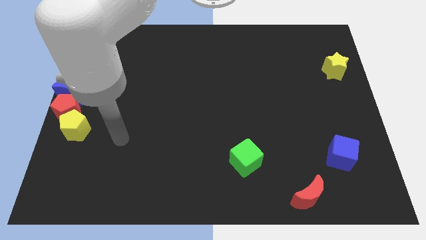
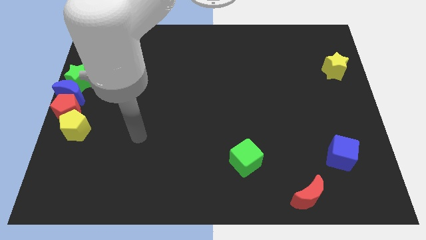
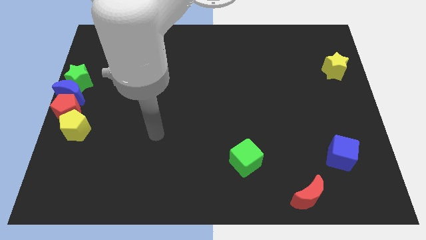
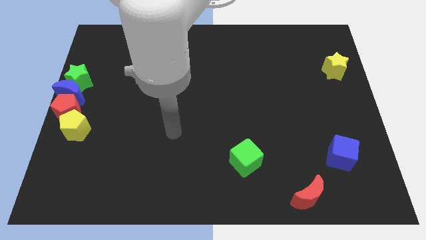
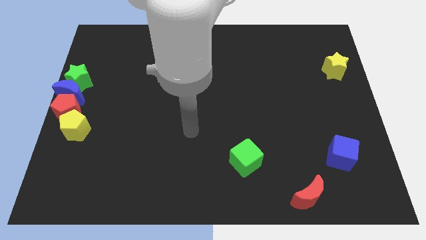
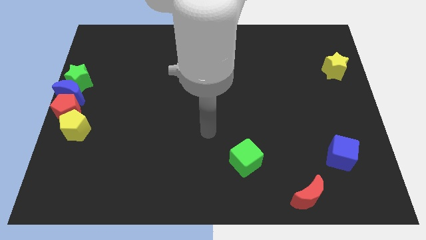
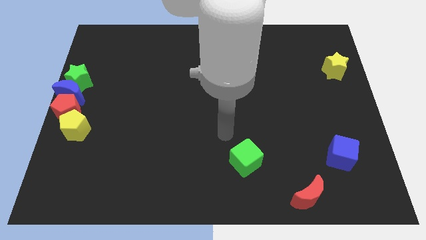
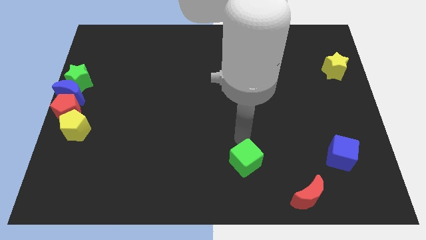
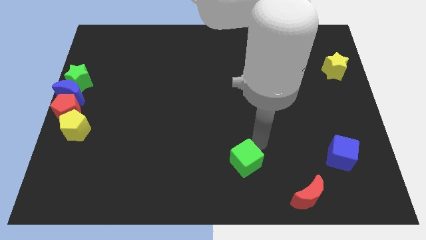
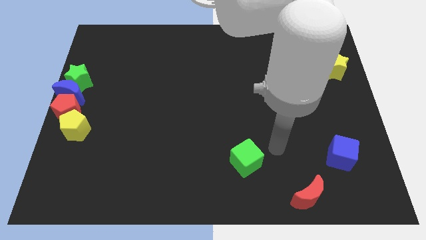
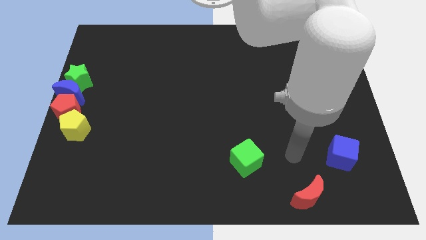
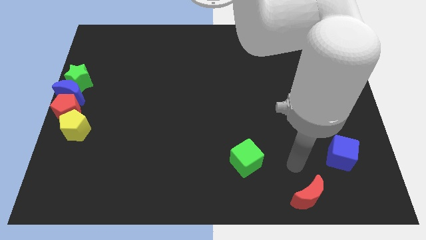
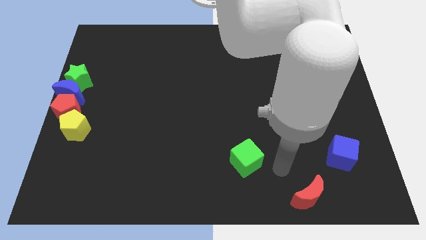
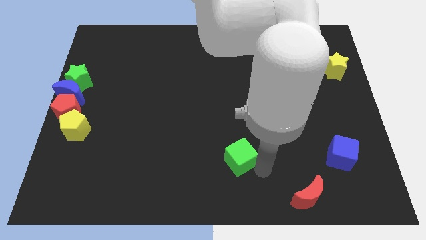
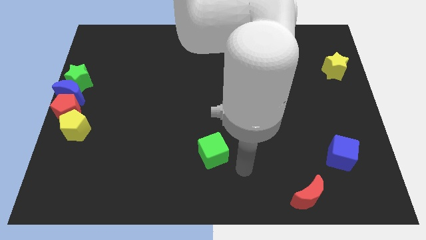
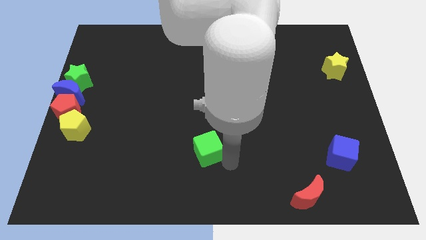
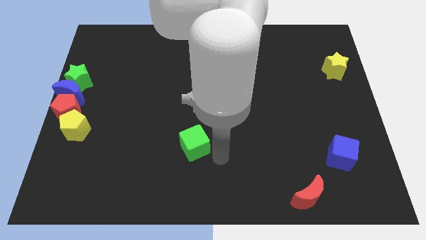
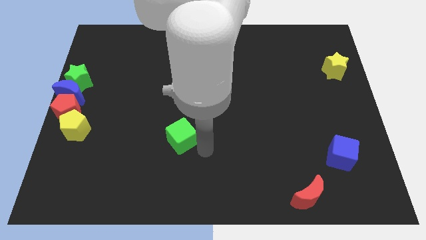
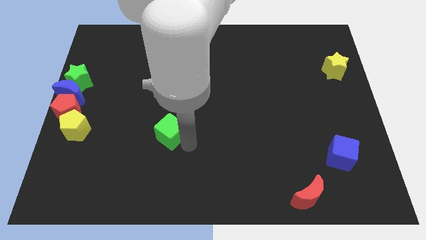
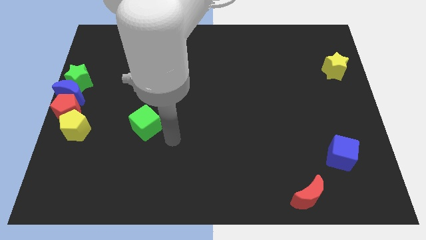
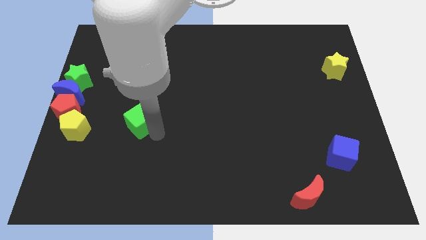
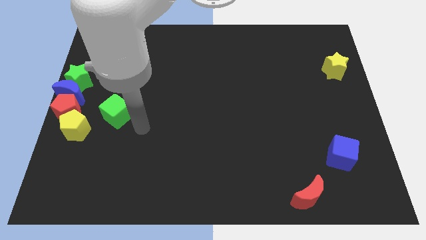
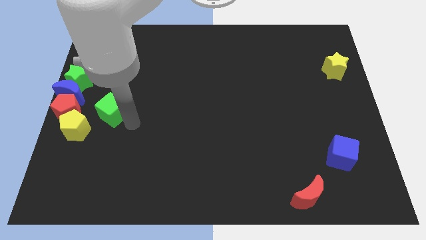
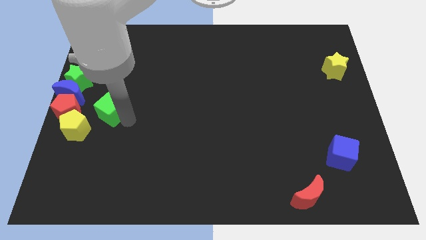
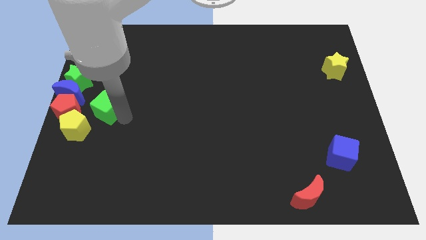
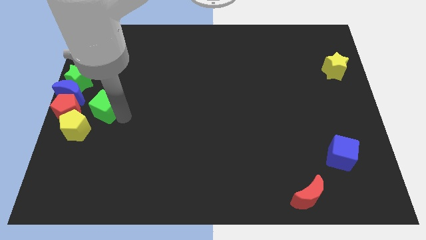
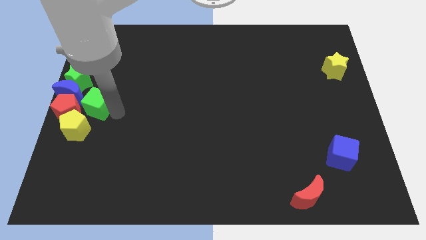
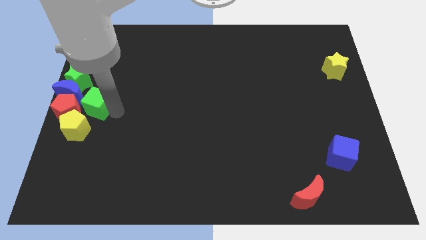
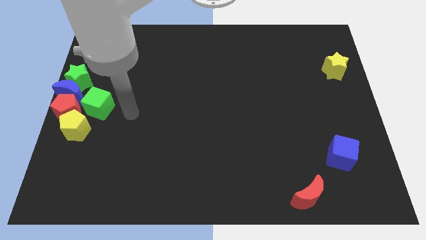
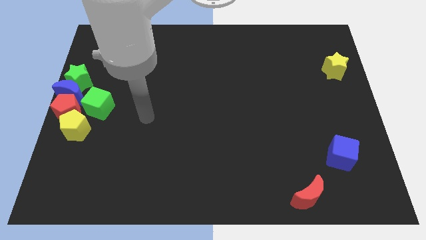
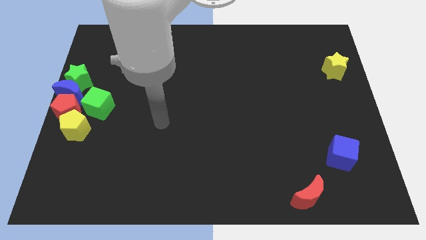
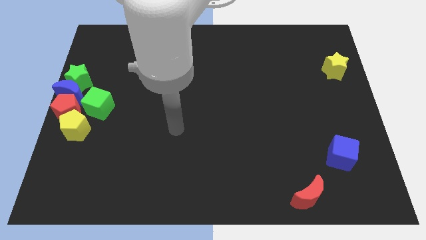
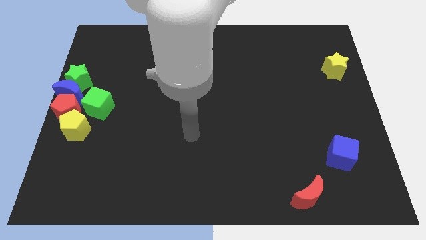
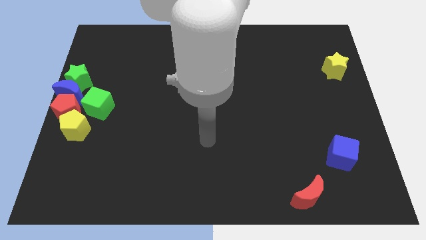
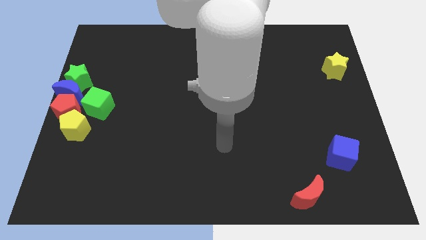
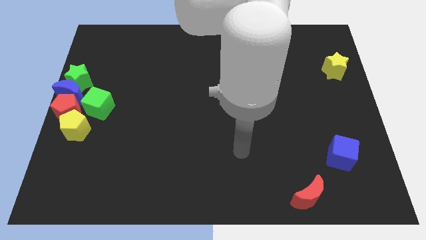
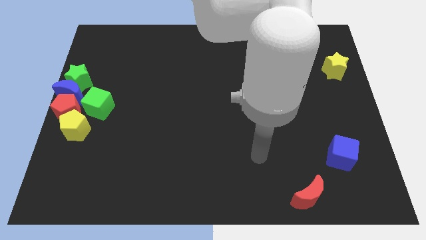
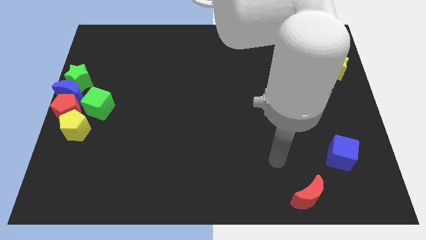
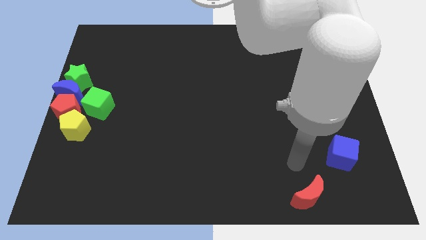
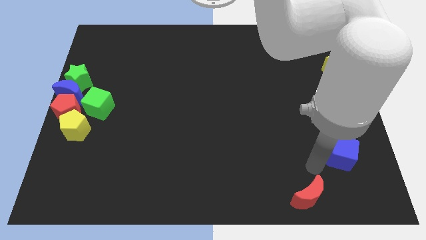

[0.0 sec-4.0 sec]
place the green cube to the right of the blue crescent

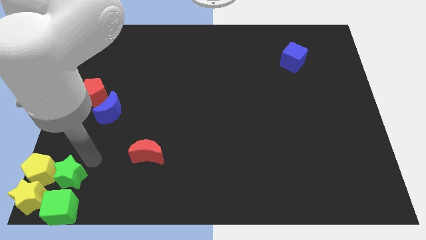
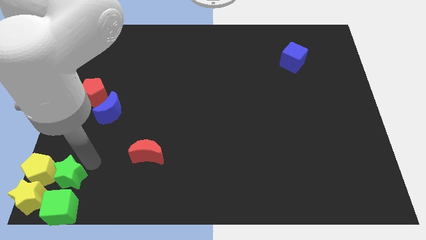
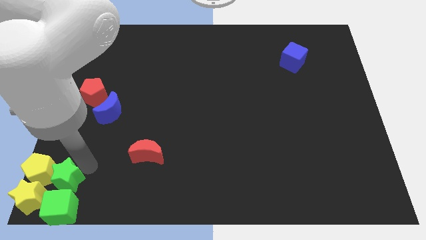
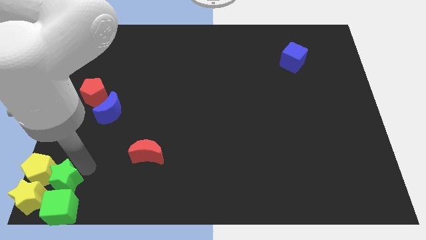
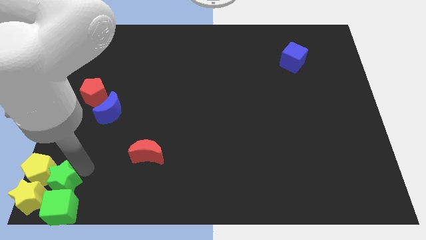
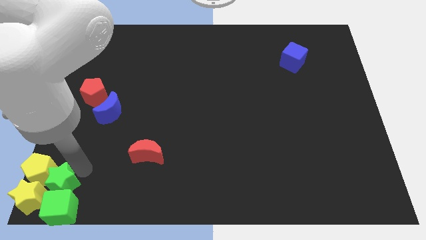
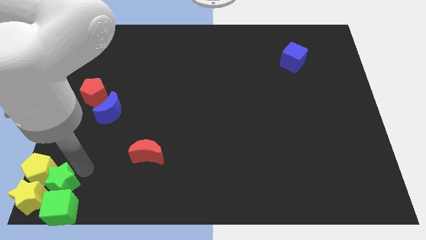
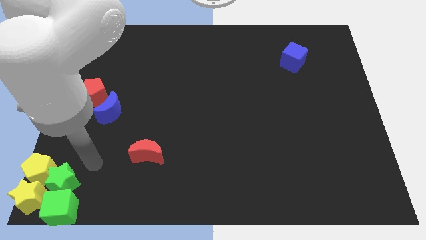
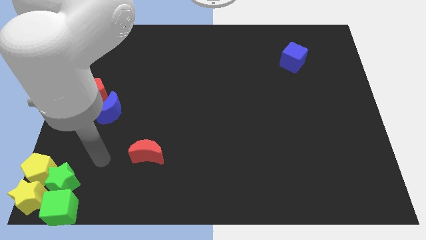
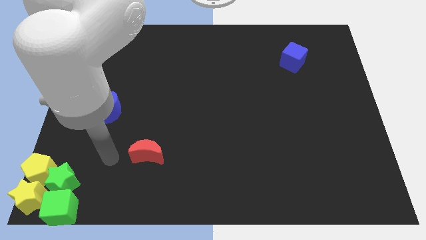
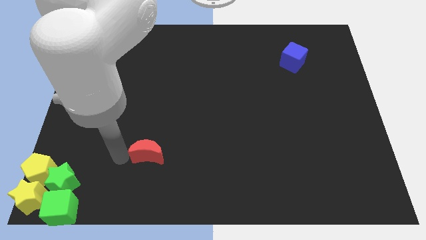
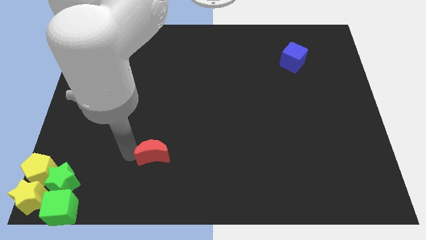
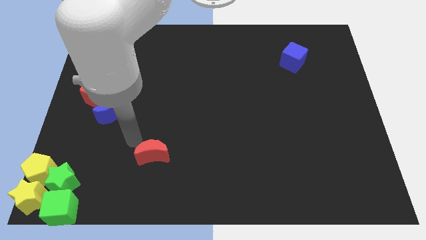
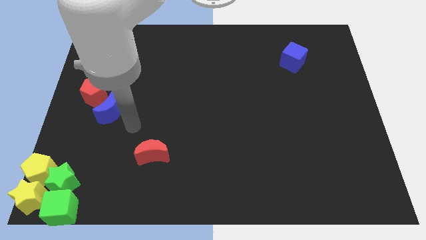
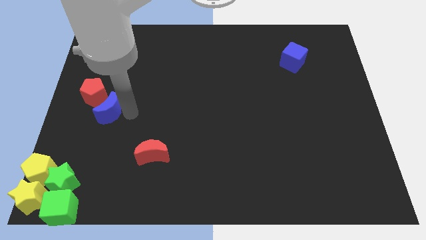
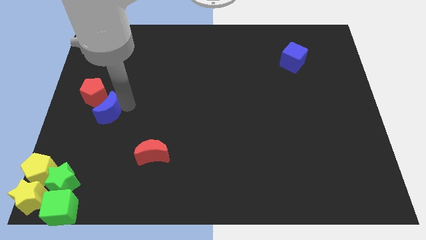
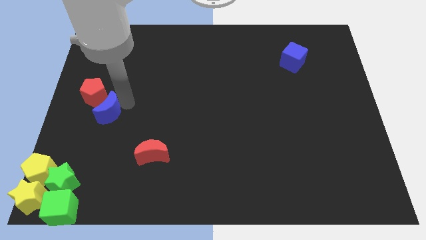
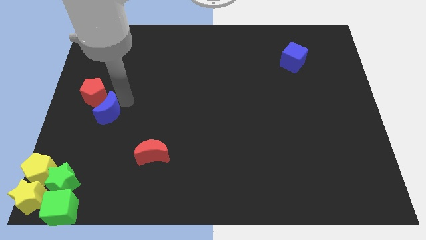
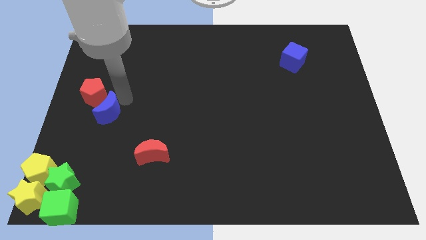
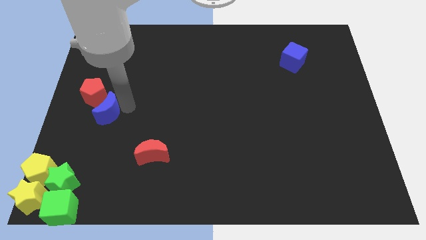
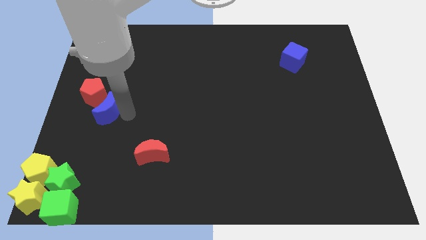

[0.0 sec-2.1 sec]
push the green star into the green yellow blocks

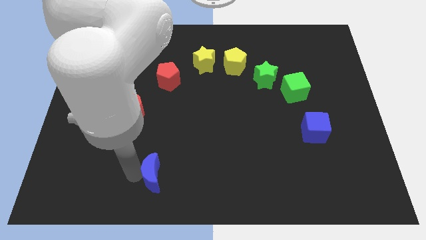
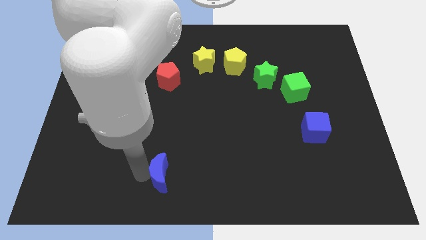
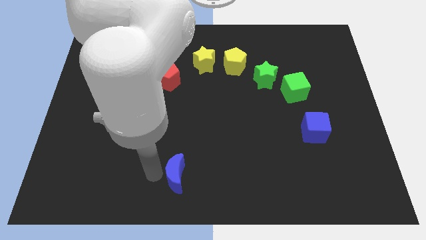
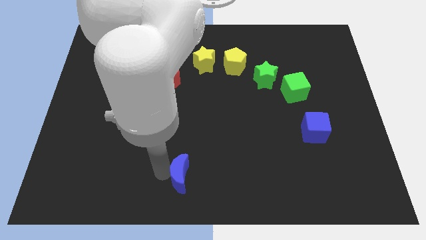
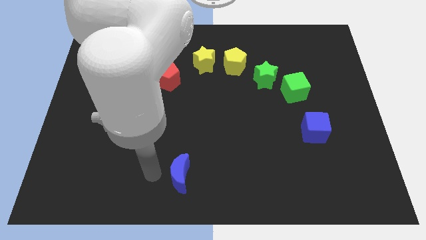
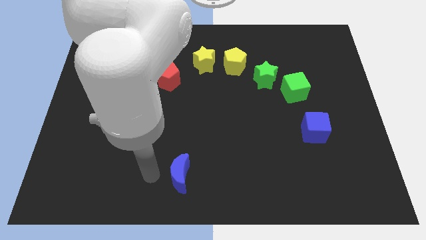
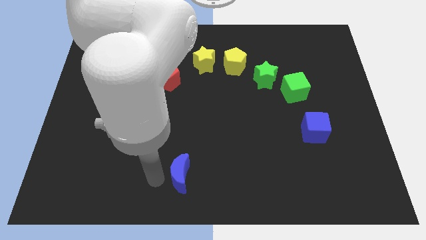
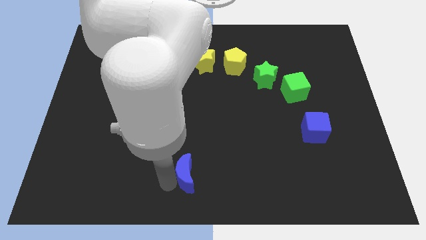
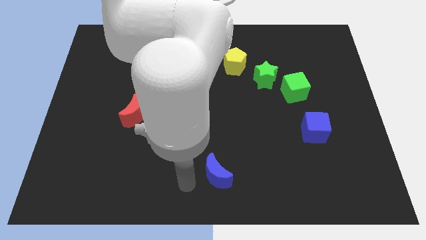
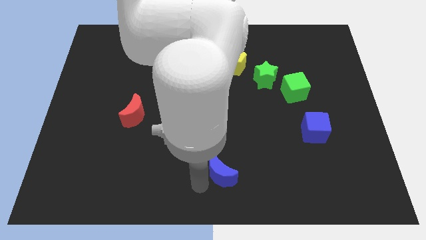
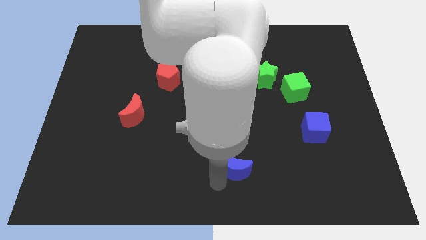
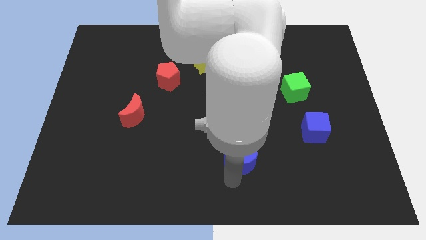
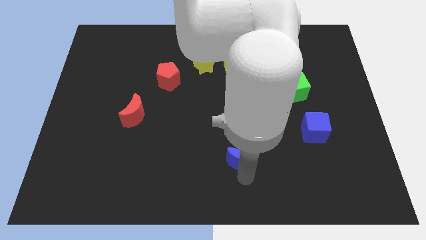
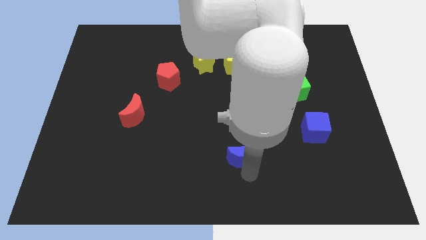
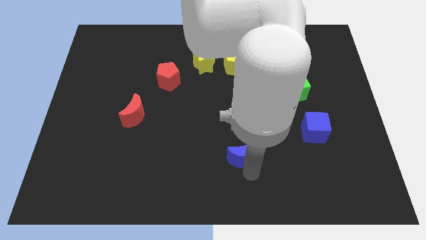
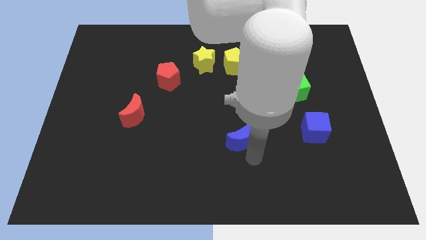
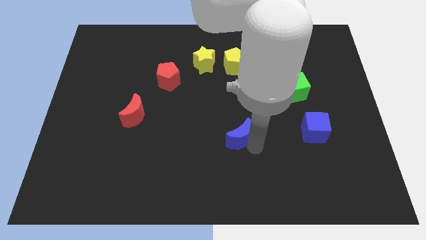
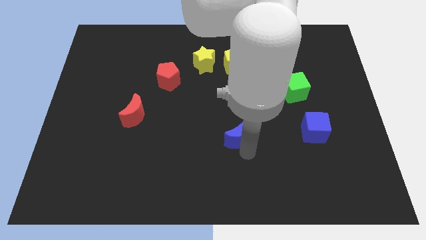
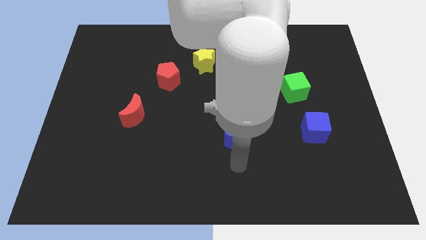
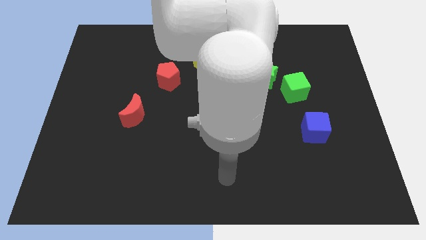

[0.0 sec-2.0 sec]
push the blue crescent parallel to the blue cube

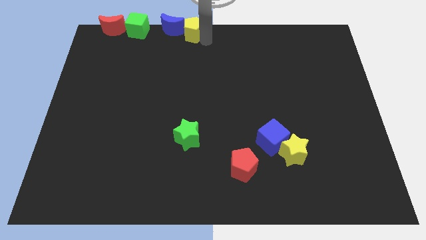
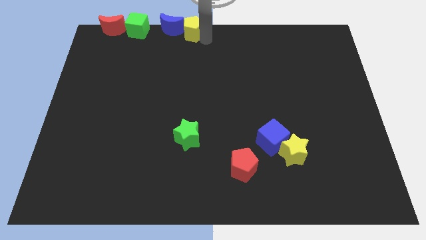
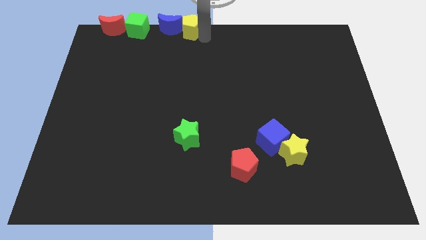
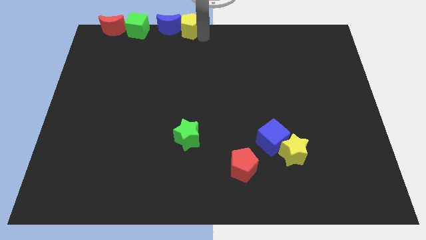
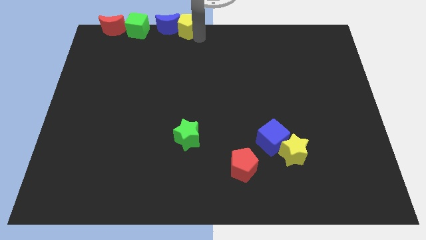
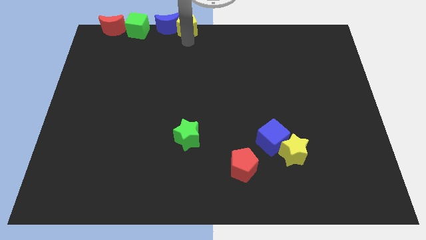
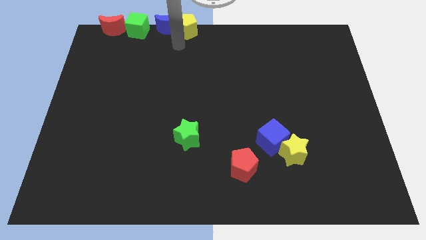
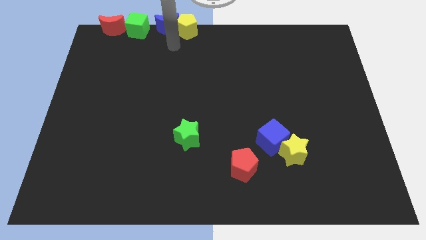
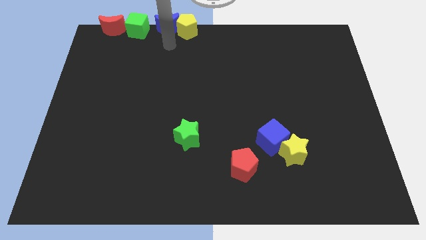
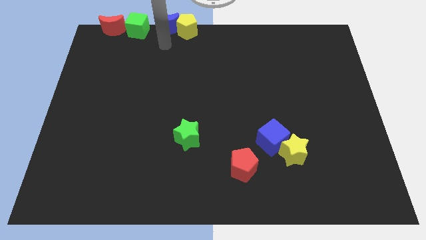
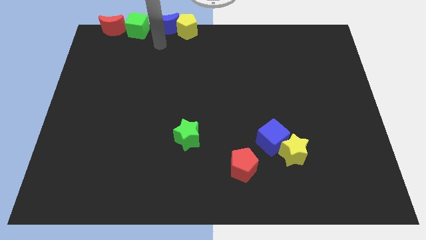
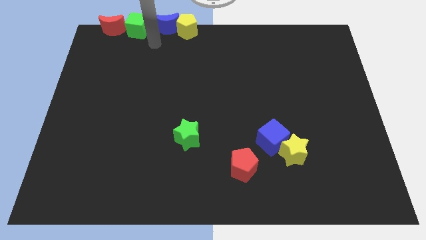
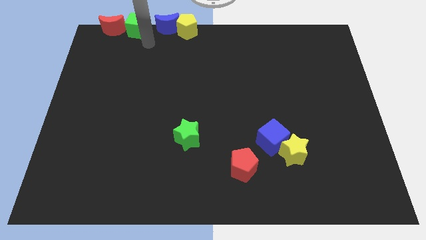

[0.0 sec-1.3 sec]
push the yellow pentagon into the blue crescent from the right
